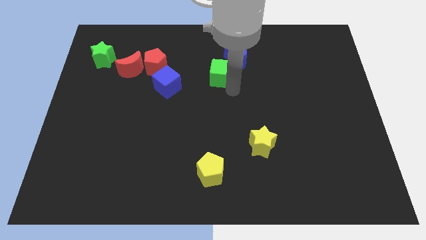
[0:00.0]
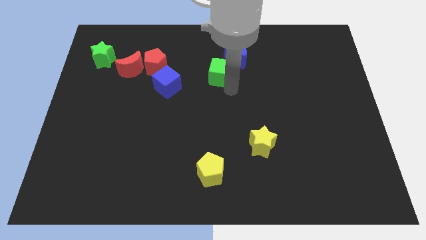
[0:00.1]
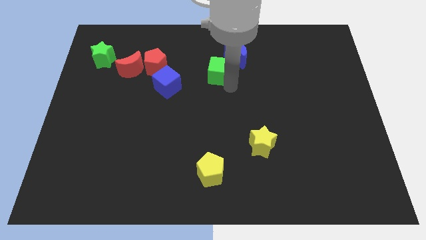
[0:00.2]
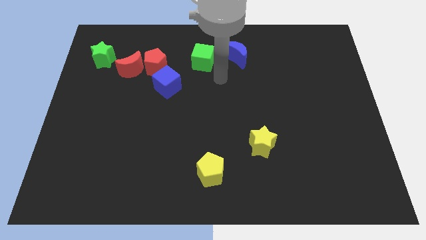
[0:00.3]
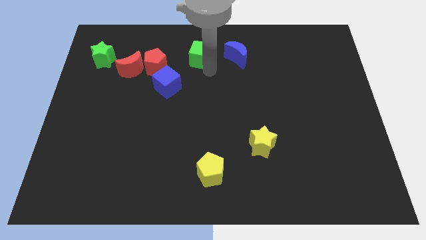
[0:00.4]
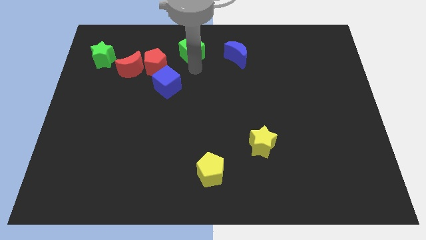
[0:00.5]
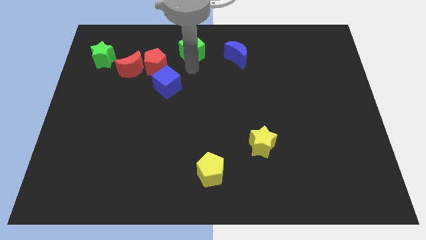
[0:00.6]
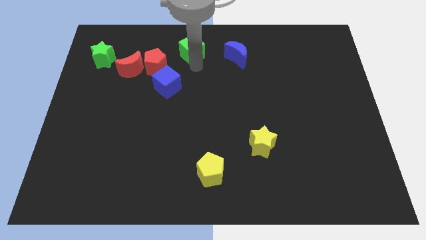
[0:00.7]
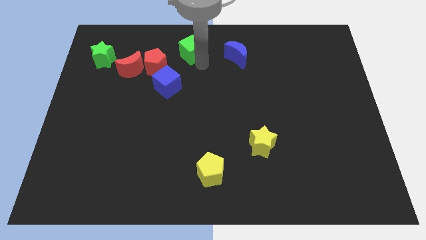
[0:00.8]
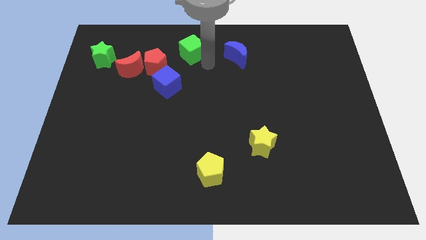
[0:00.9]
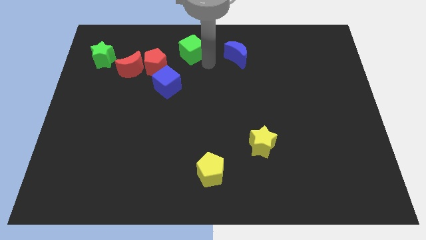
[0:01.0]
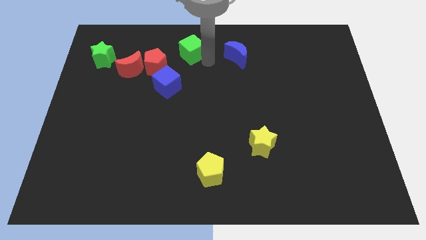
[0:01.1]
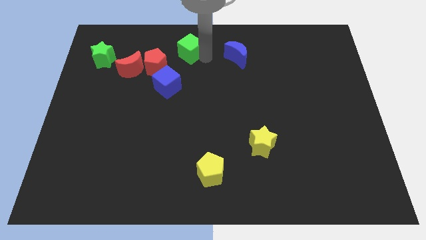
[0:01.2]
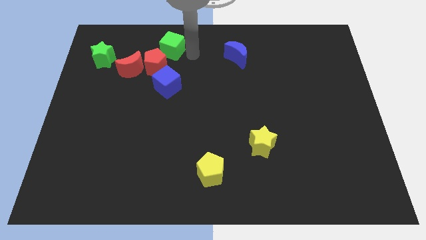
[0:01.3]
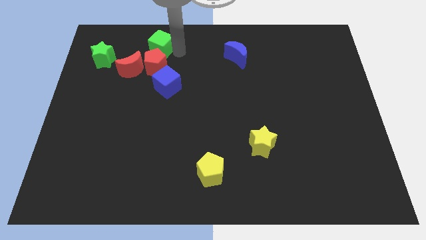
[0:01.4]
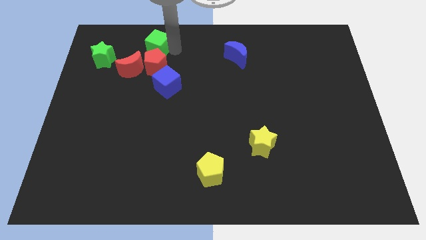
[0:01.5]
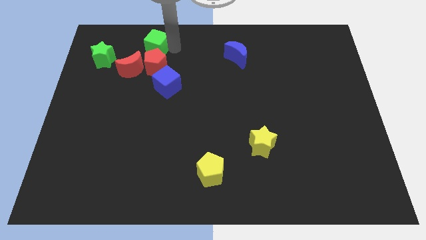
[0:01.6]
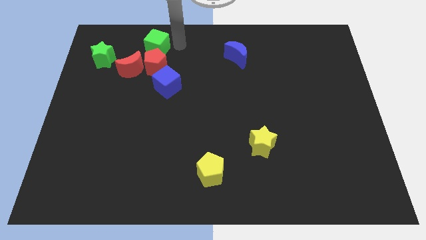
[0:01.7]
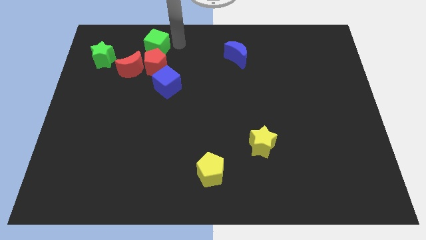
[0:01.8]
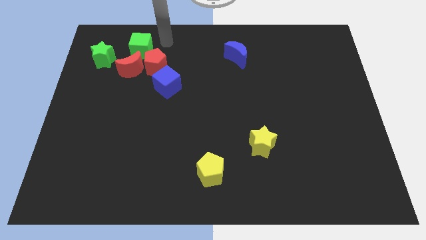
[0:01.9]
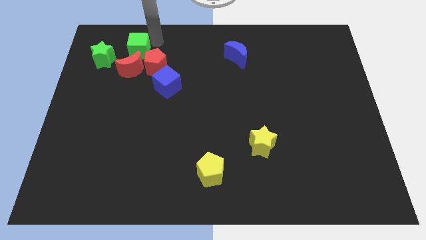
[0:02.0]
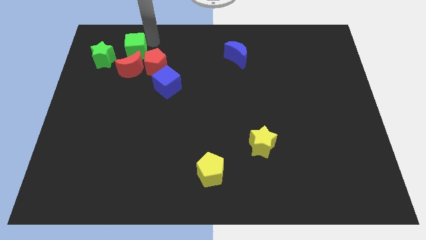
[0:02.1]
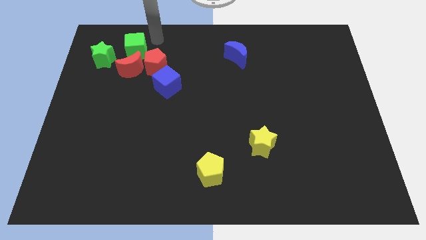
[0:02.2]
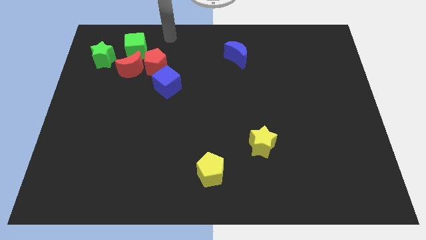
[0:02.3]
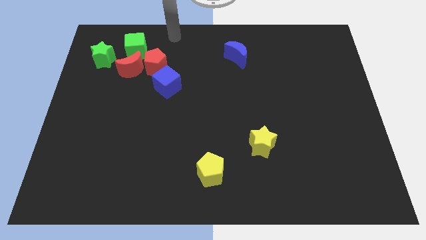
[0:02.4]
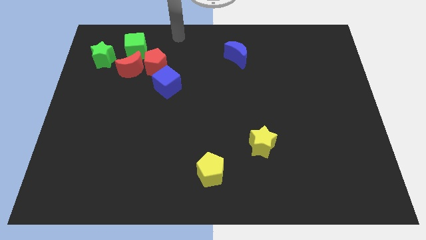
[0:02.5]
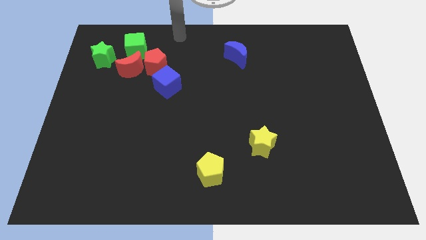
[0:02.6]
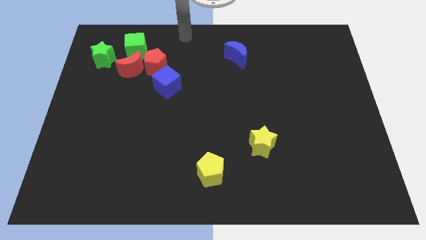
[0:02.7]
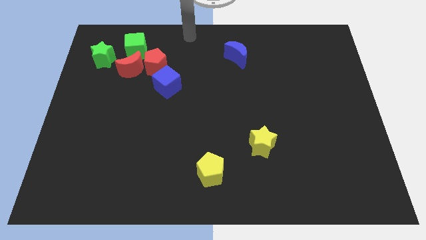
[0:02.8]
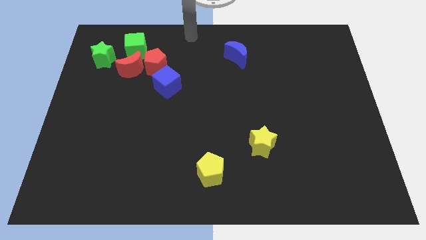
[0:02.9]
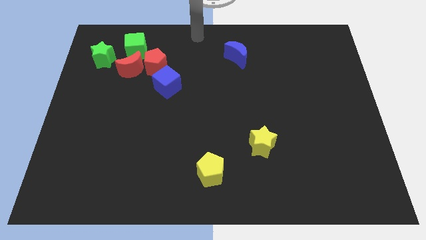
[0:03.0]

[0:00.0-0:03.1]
place the green cube diagonally top left to the blue cube

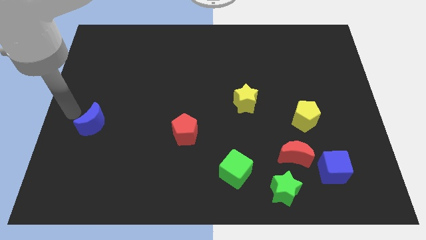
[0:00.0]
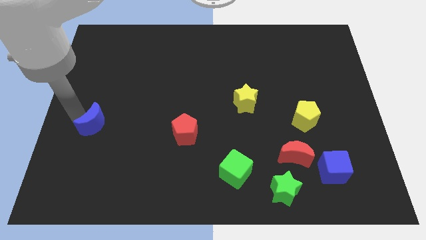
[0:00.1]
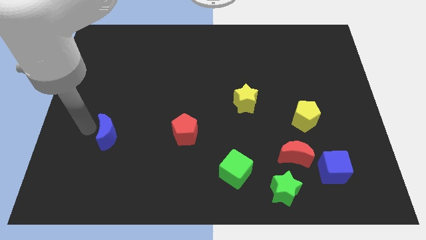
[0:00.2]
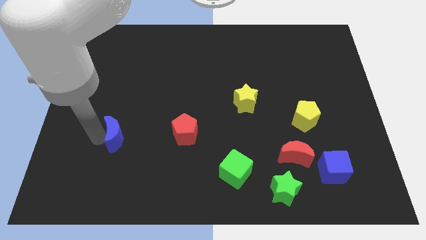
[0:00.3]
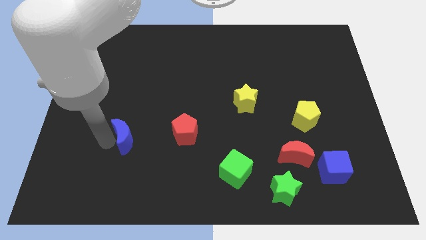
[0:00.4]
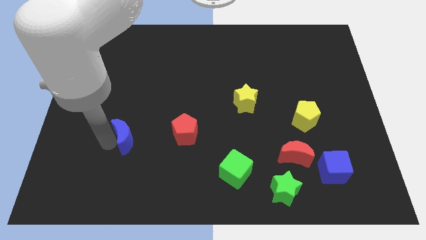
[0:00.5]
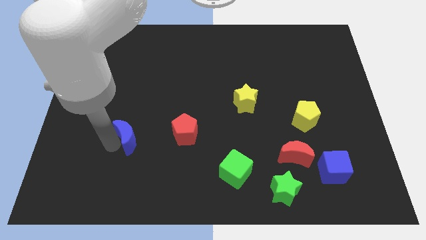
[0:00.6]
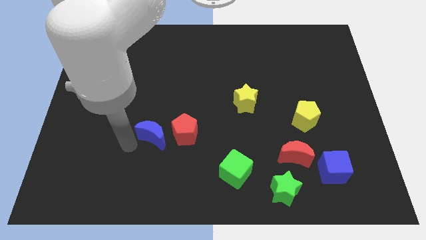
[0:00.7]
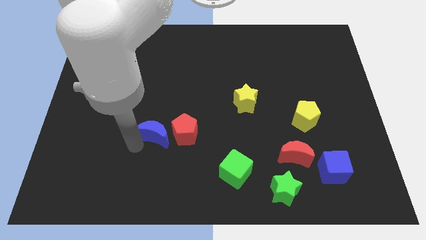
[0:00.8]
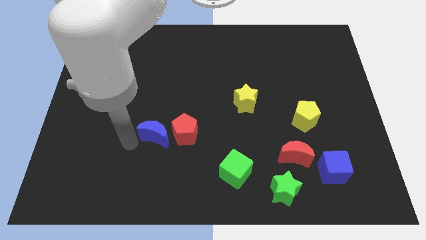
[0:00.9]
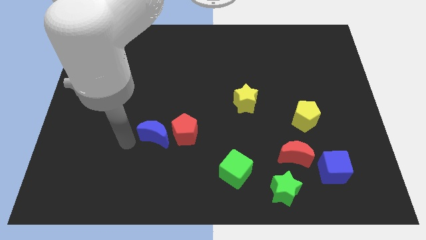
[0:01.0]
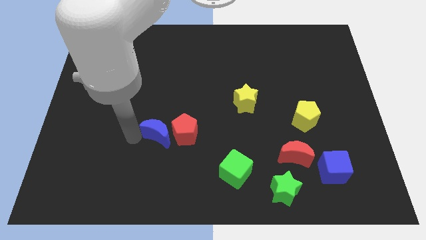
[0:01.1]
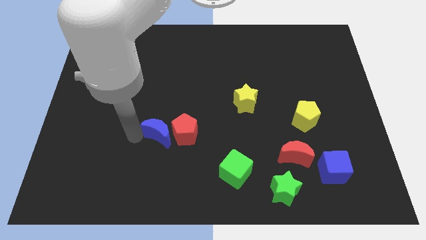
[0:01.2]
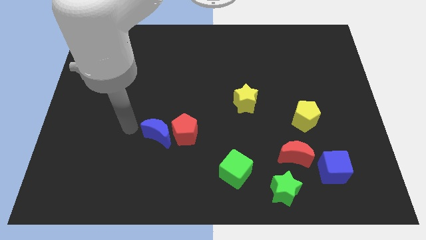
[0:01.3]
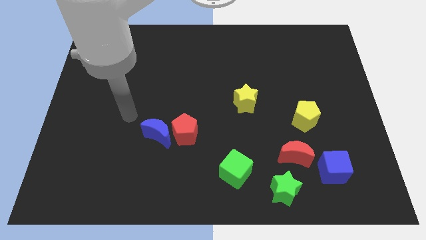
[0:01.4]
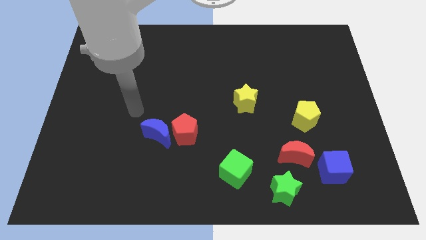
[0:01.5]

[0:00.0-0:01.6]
push the blue crescent to the left of the red pentagon

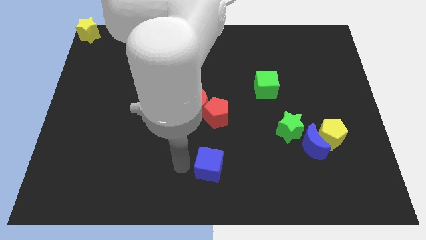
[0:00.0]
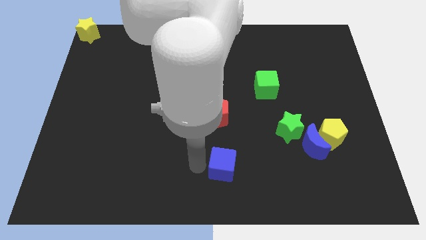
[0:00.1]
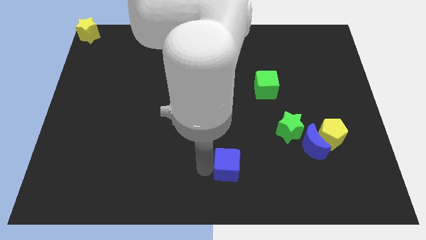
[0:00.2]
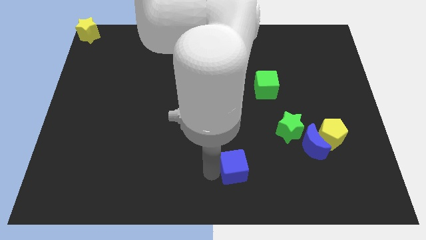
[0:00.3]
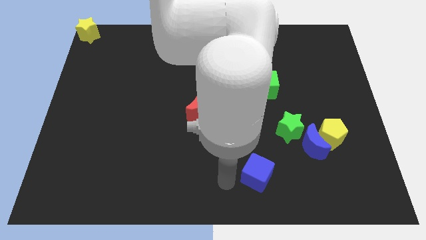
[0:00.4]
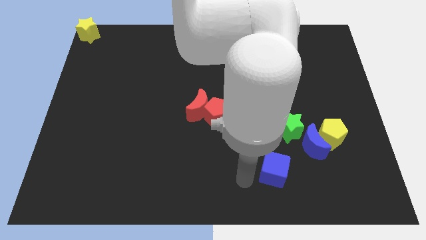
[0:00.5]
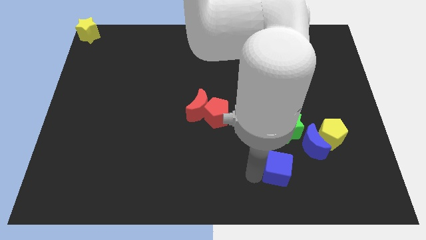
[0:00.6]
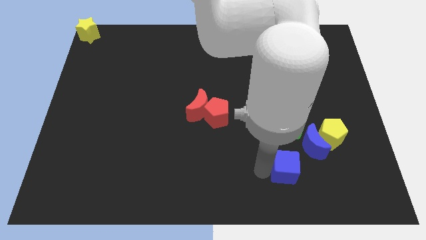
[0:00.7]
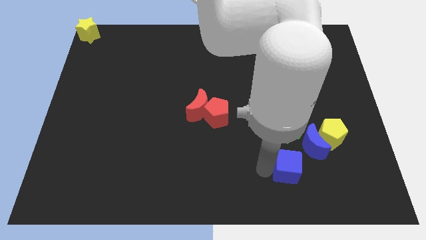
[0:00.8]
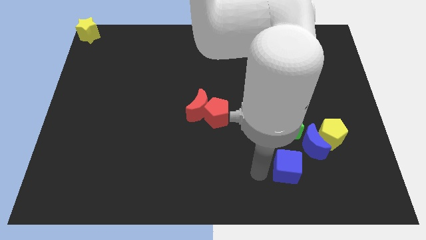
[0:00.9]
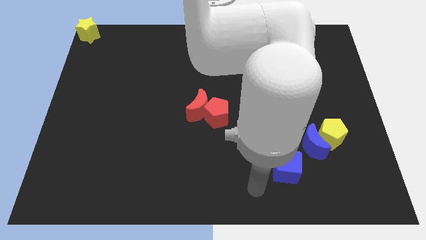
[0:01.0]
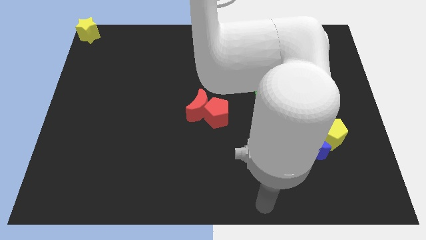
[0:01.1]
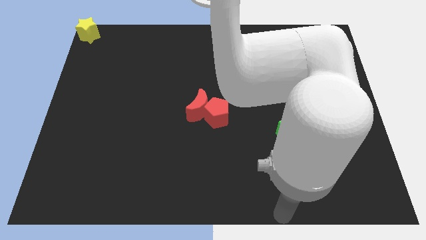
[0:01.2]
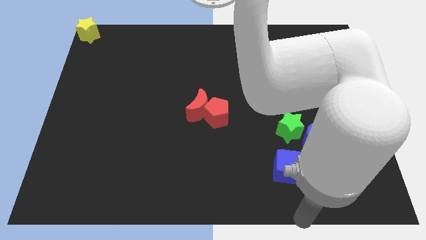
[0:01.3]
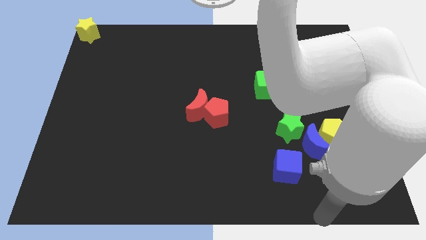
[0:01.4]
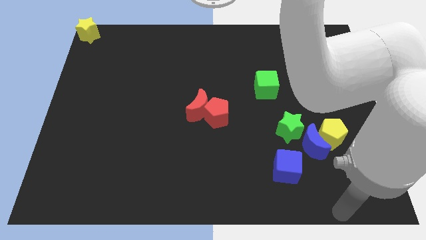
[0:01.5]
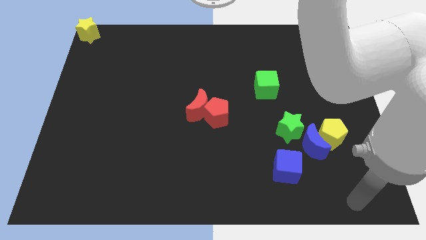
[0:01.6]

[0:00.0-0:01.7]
move blue cube to the bottom left of blue crescent

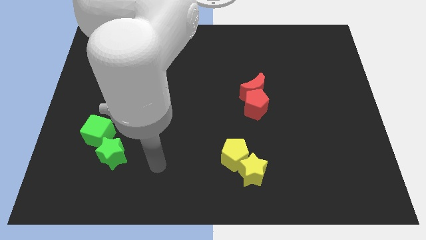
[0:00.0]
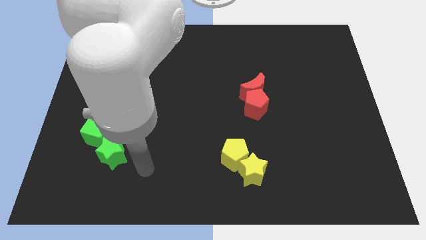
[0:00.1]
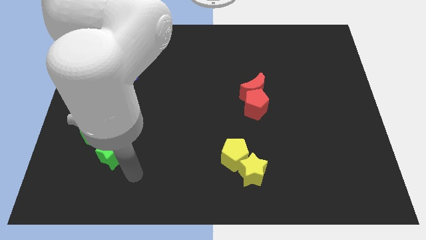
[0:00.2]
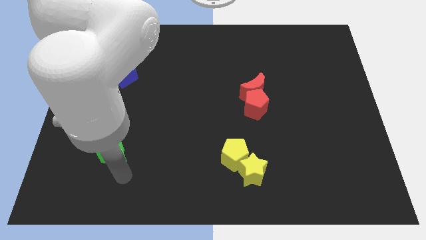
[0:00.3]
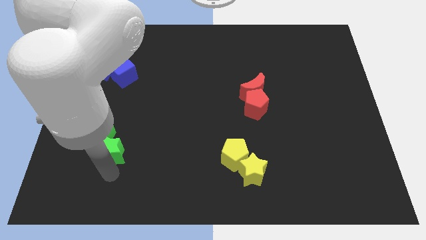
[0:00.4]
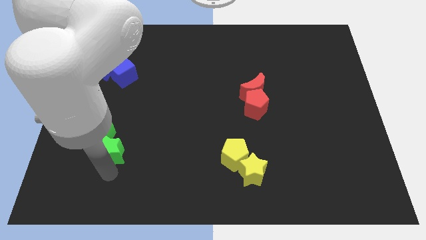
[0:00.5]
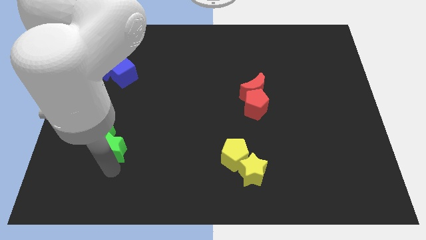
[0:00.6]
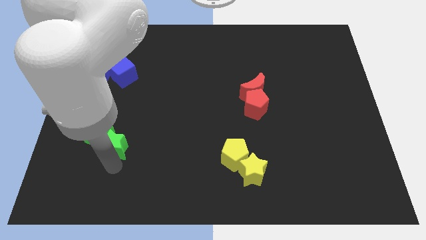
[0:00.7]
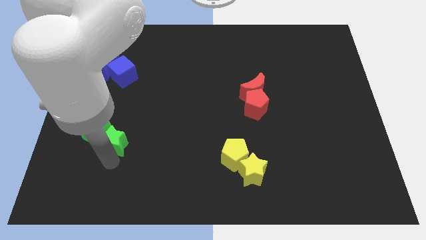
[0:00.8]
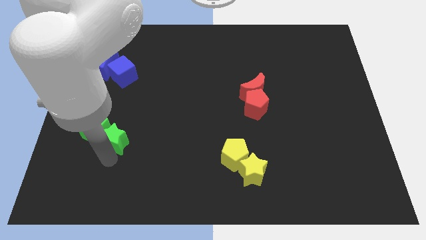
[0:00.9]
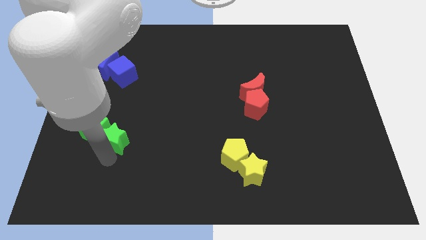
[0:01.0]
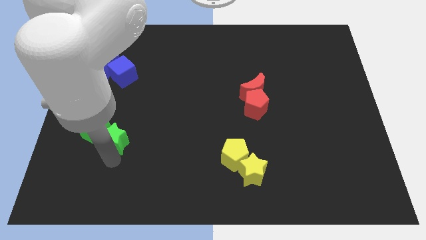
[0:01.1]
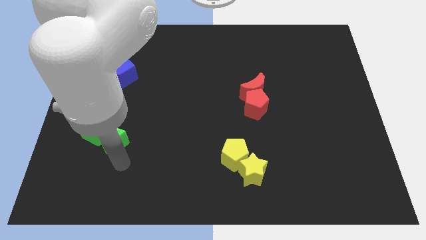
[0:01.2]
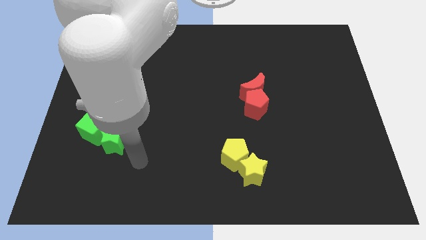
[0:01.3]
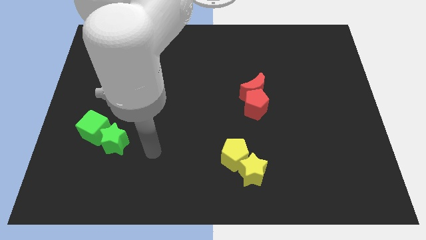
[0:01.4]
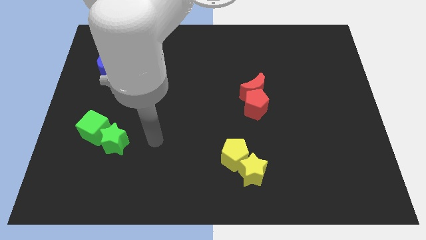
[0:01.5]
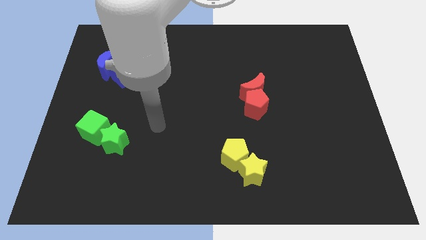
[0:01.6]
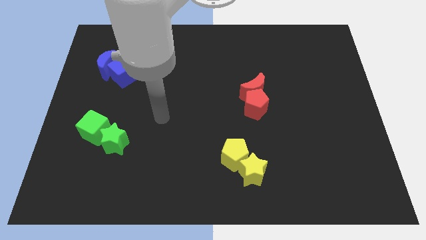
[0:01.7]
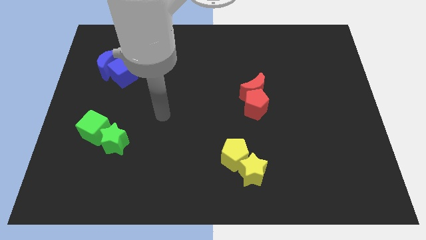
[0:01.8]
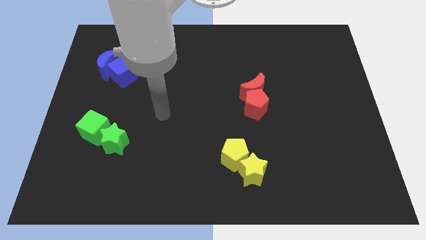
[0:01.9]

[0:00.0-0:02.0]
place the green star close to green cube

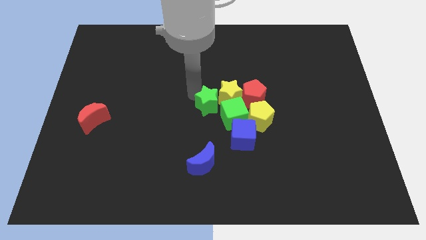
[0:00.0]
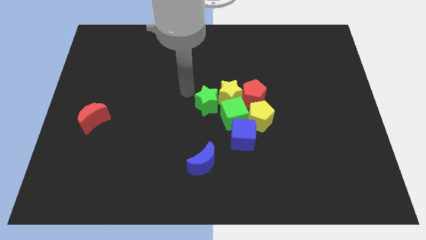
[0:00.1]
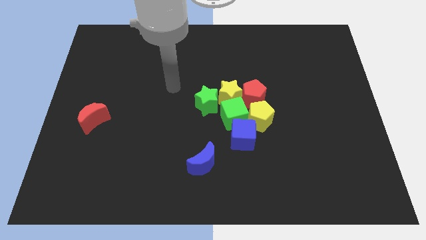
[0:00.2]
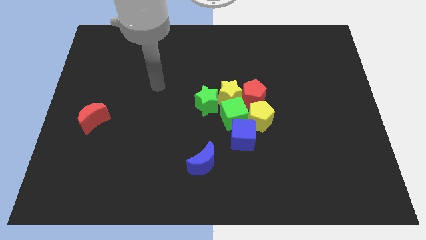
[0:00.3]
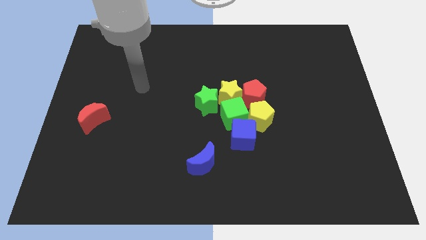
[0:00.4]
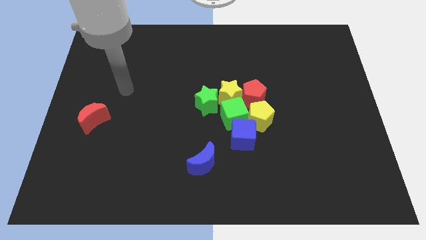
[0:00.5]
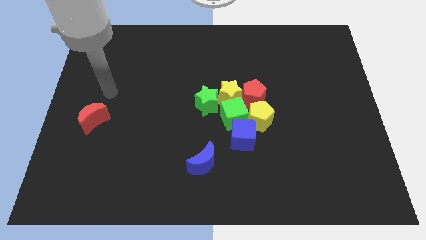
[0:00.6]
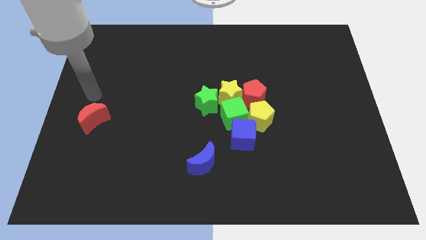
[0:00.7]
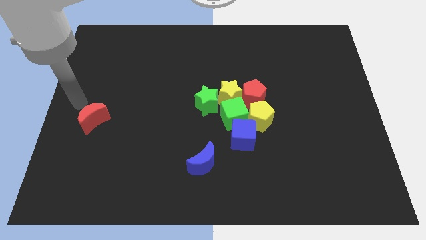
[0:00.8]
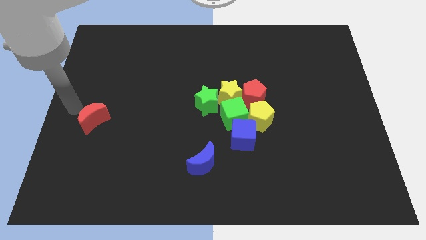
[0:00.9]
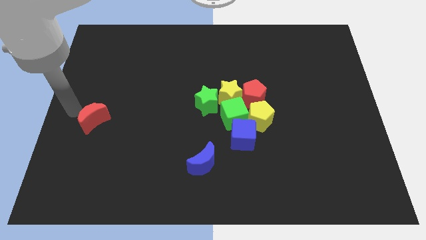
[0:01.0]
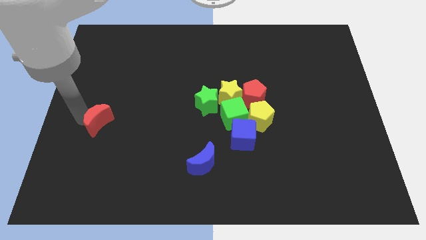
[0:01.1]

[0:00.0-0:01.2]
move your arm to the left of the red crescent
